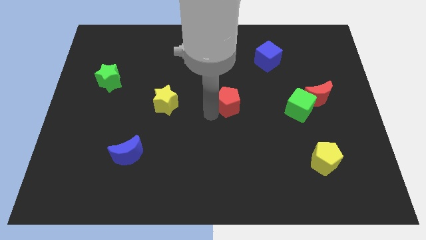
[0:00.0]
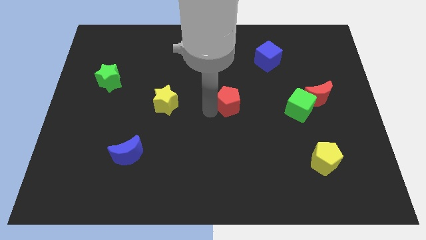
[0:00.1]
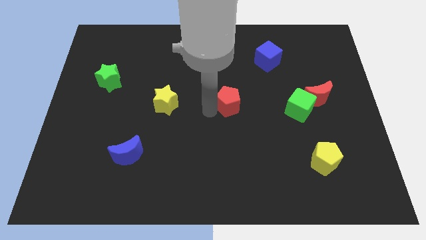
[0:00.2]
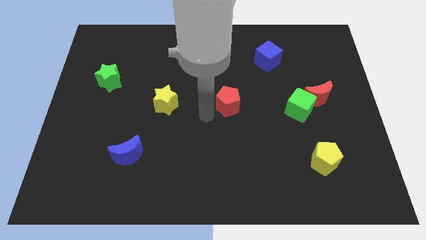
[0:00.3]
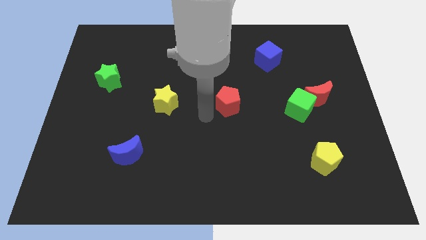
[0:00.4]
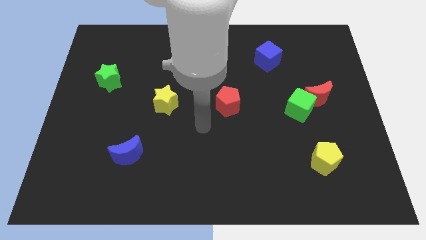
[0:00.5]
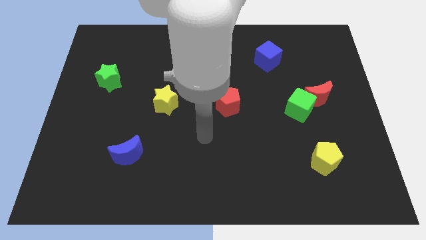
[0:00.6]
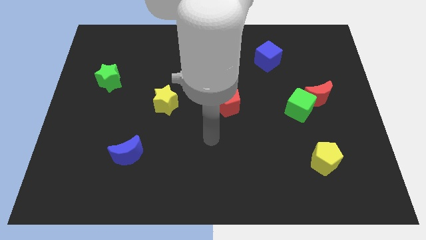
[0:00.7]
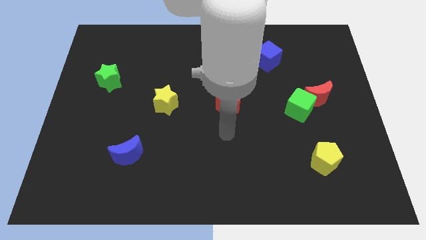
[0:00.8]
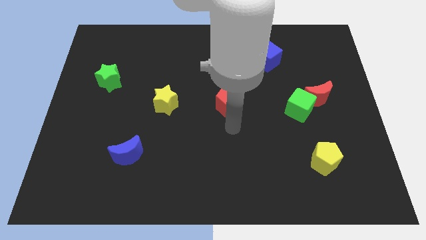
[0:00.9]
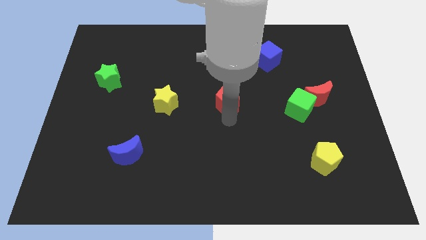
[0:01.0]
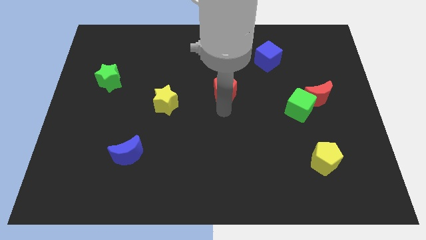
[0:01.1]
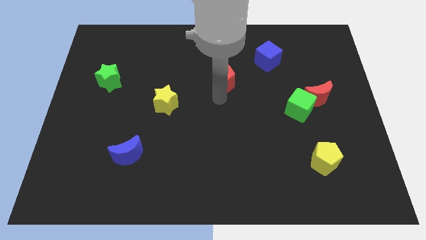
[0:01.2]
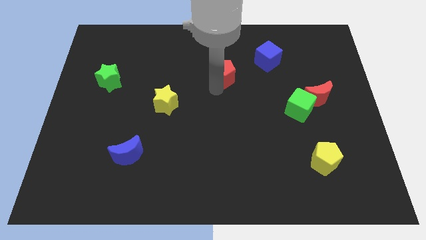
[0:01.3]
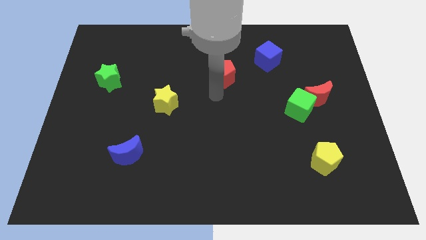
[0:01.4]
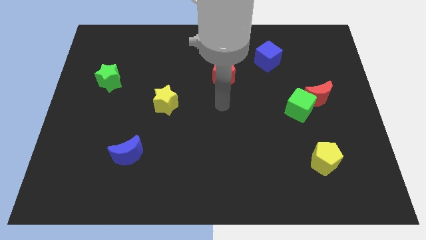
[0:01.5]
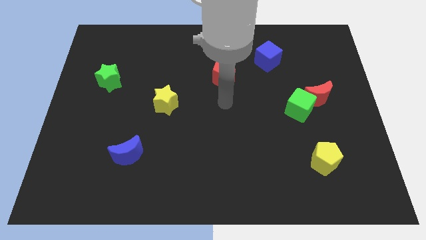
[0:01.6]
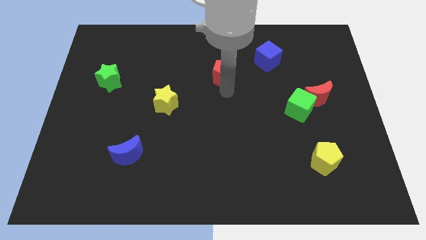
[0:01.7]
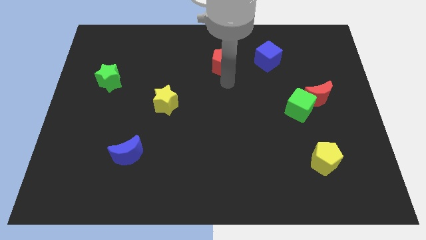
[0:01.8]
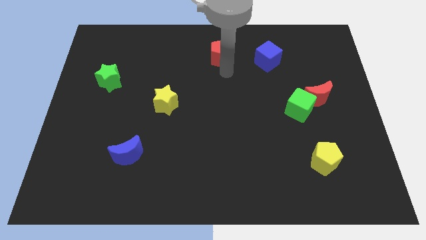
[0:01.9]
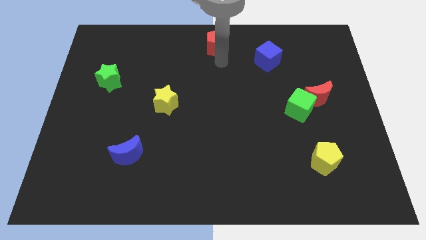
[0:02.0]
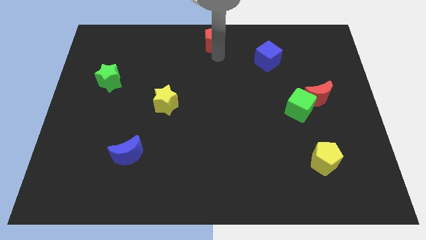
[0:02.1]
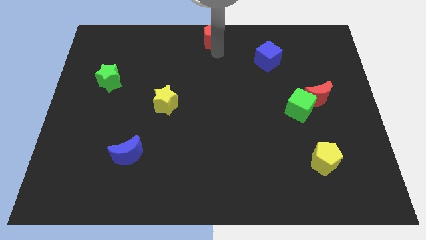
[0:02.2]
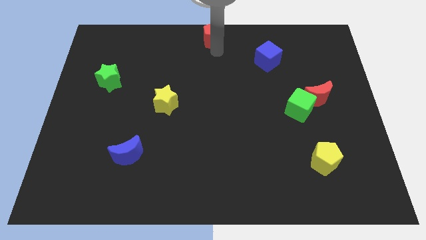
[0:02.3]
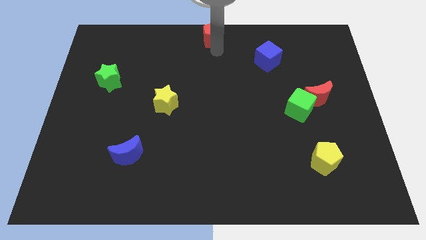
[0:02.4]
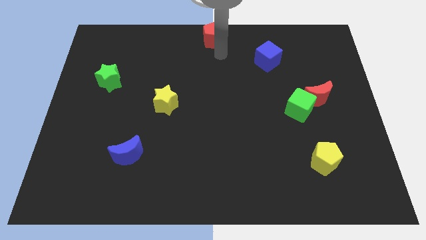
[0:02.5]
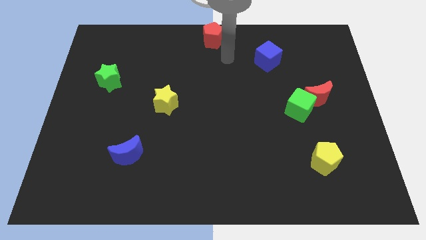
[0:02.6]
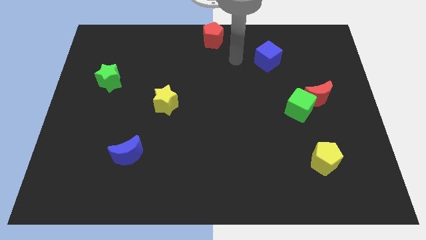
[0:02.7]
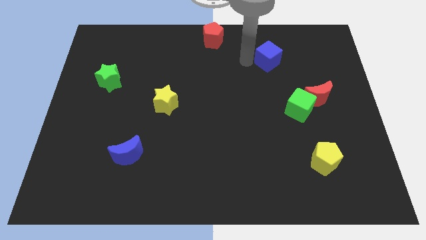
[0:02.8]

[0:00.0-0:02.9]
move red pentagon to the top middle

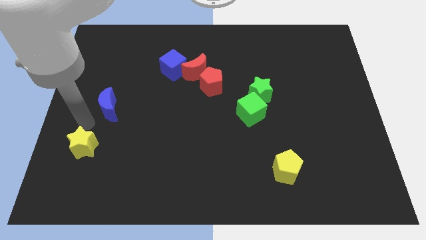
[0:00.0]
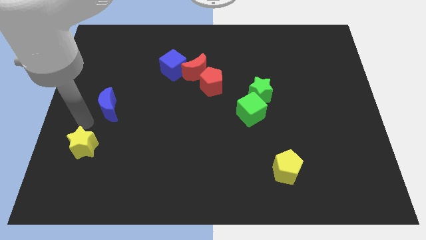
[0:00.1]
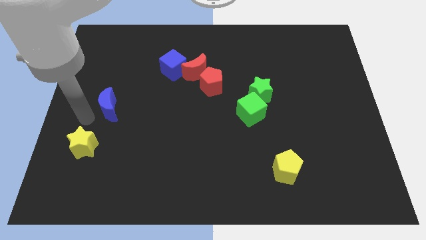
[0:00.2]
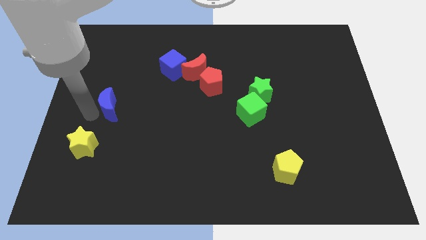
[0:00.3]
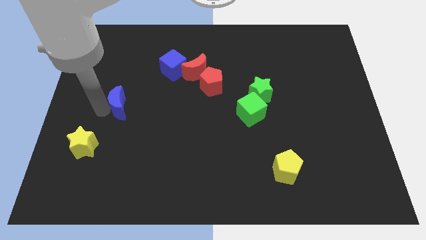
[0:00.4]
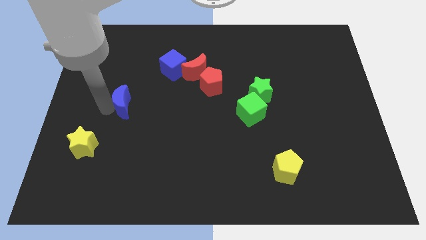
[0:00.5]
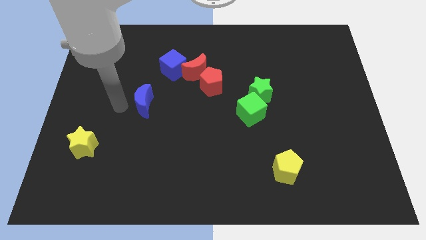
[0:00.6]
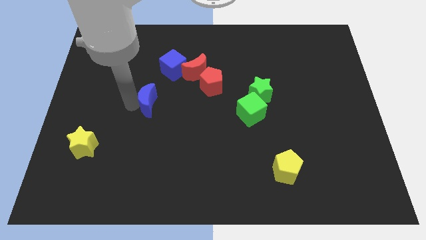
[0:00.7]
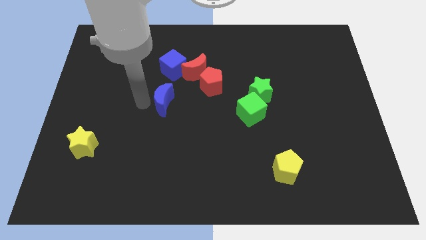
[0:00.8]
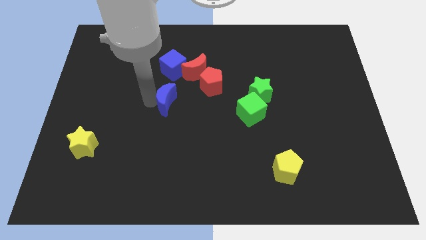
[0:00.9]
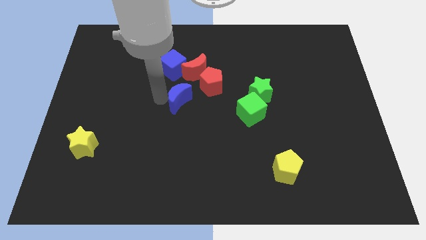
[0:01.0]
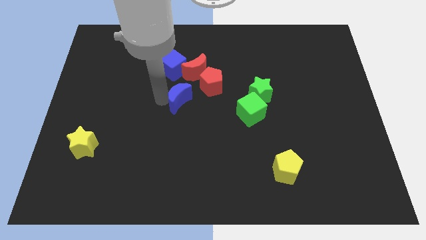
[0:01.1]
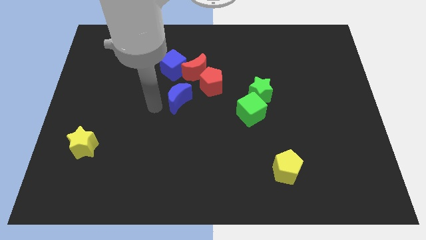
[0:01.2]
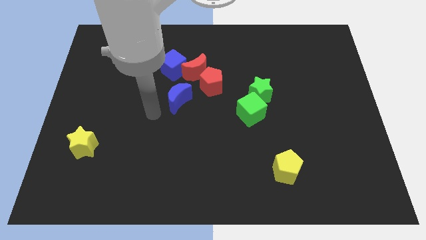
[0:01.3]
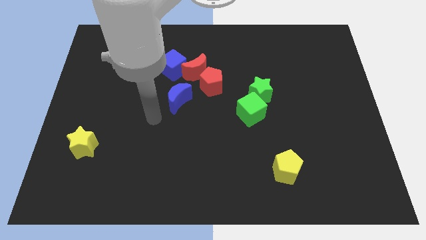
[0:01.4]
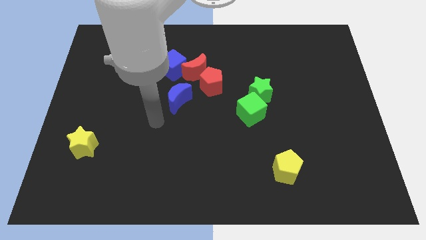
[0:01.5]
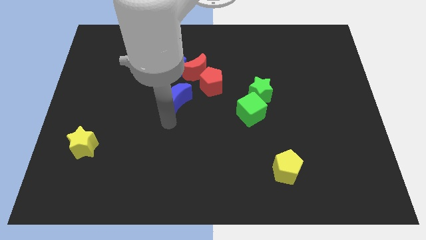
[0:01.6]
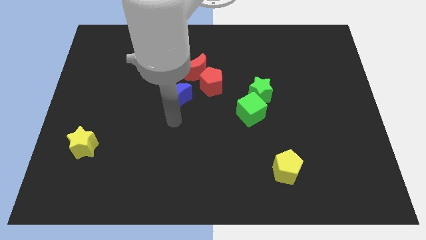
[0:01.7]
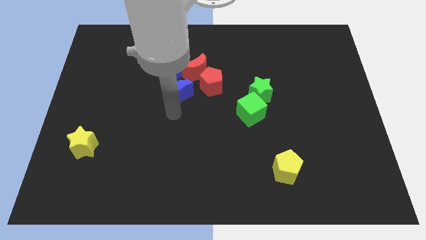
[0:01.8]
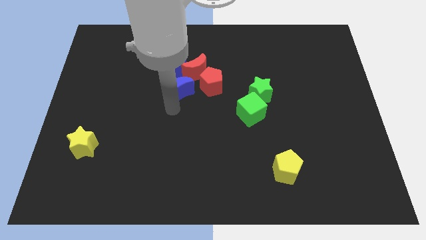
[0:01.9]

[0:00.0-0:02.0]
push the blue crescent to the bottom of the blue cube

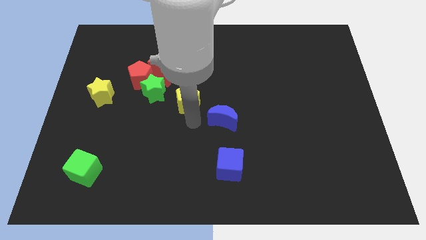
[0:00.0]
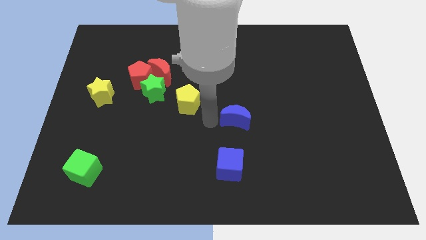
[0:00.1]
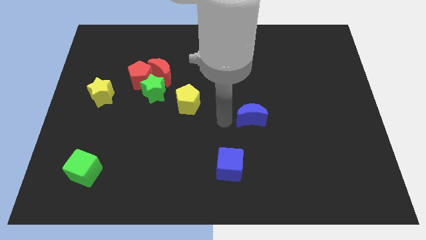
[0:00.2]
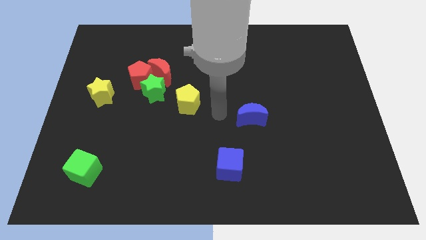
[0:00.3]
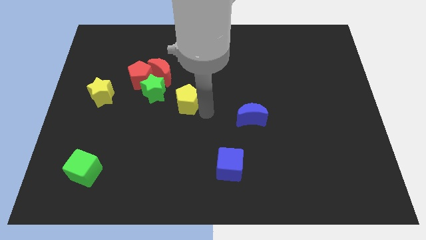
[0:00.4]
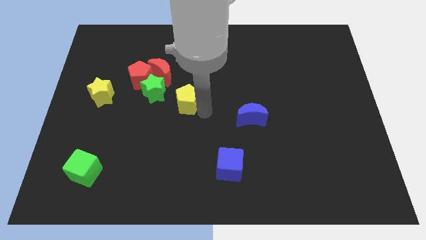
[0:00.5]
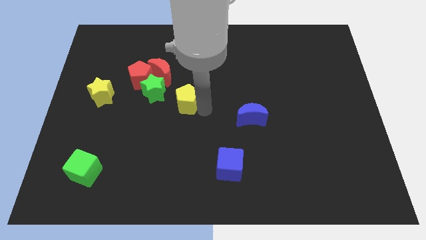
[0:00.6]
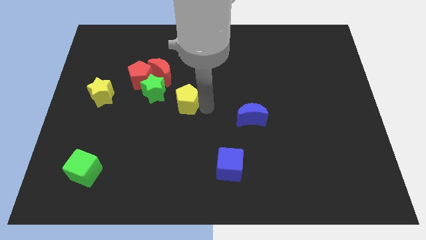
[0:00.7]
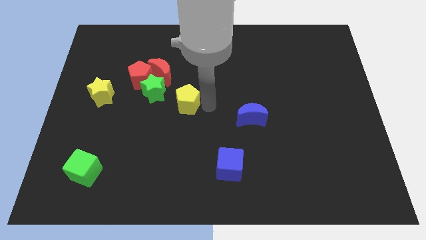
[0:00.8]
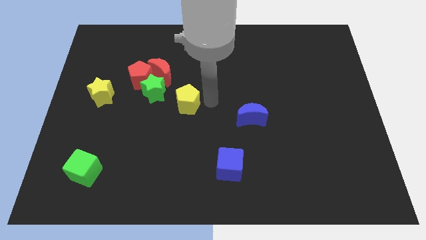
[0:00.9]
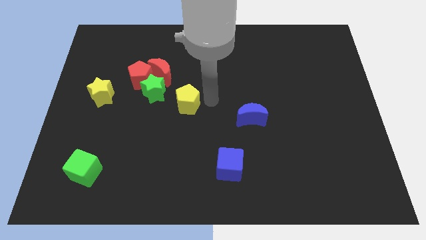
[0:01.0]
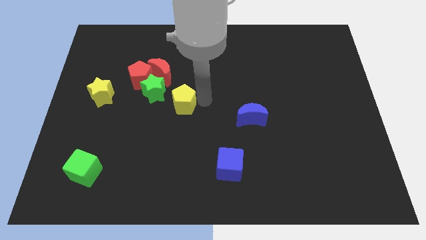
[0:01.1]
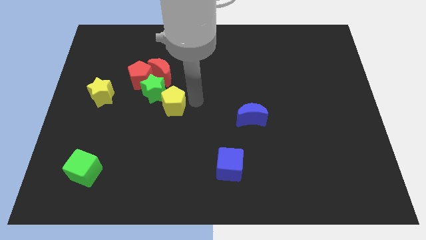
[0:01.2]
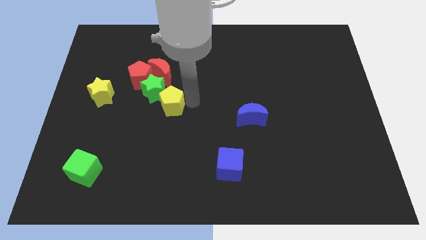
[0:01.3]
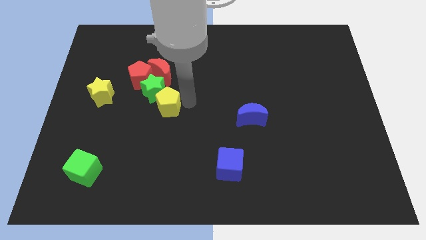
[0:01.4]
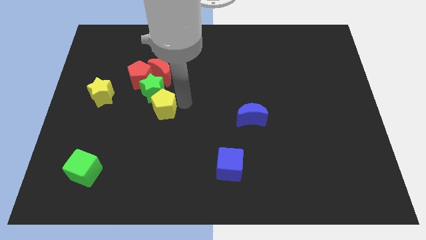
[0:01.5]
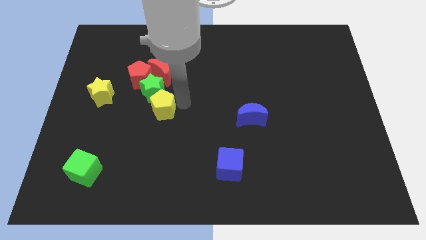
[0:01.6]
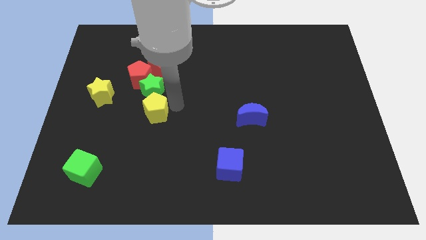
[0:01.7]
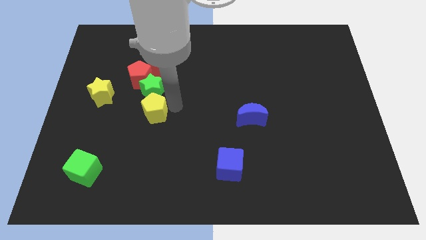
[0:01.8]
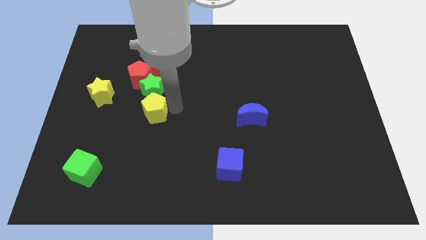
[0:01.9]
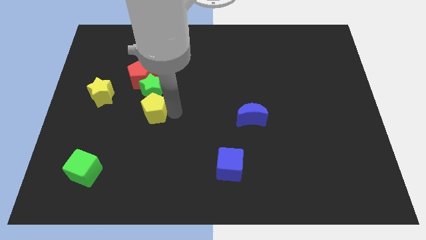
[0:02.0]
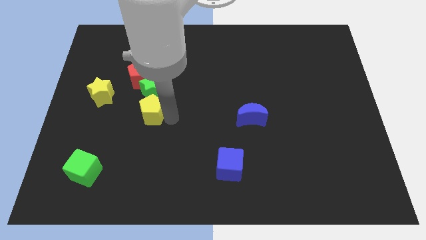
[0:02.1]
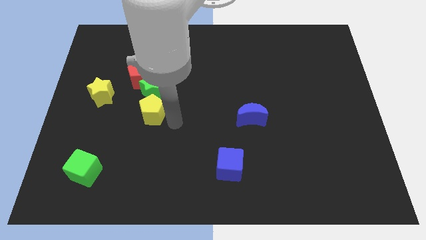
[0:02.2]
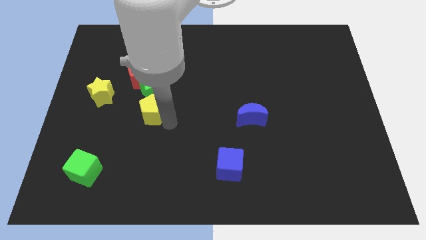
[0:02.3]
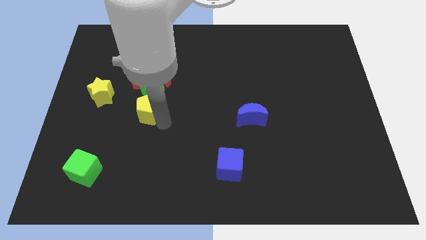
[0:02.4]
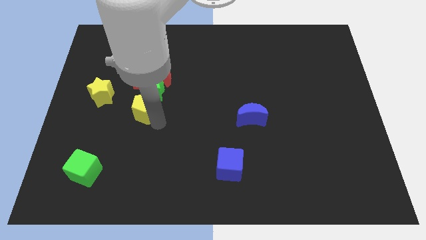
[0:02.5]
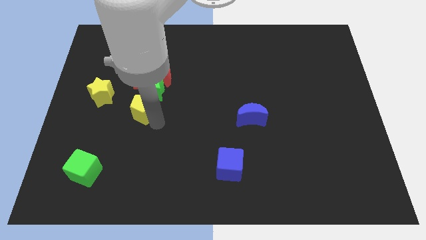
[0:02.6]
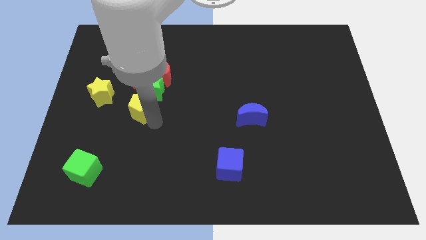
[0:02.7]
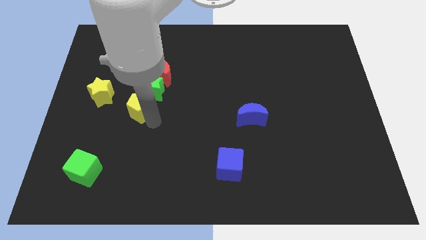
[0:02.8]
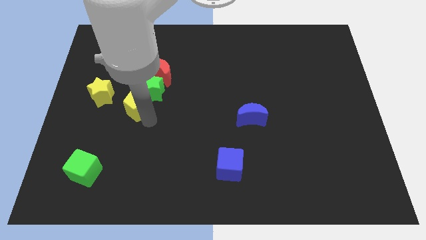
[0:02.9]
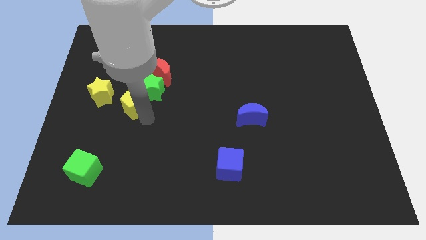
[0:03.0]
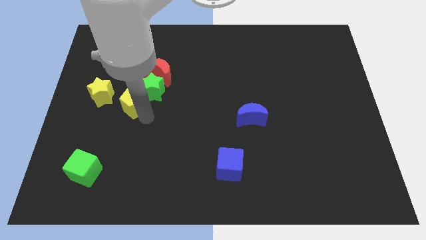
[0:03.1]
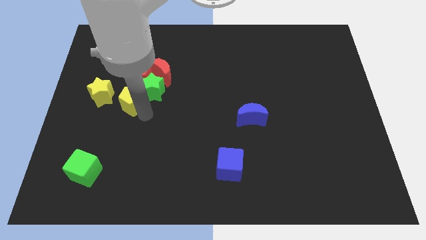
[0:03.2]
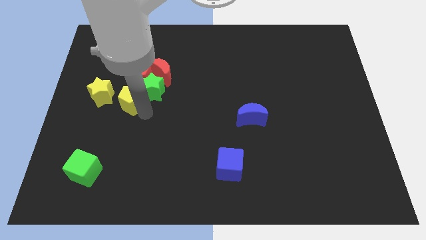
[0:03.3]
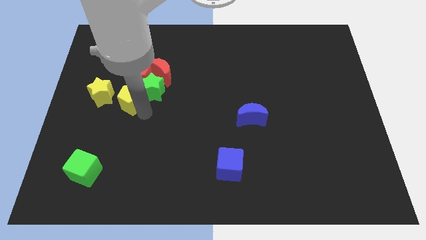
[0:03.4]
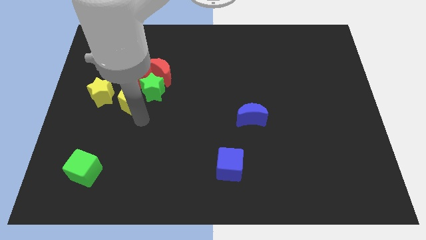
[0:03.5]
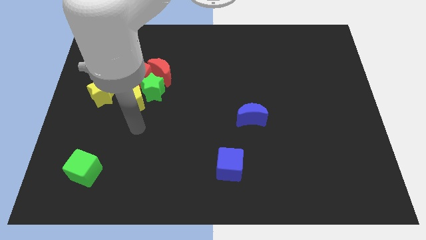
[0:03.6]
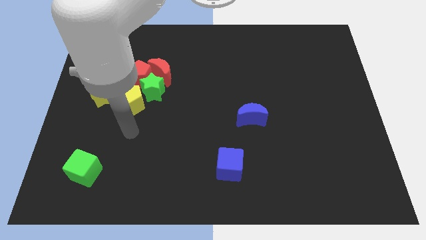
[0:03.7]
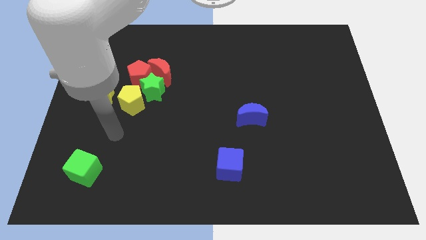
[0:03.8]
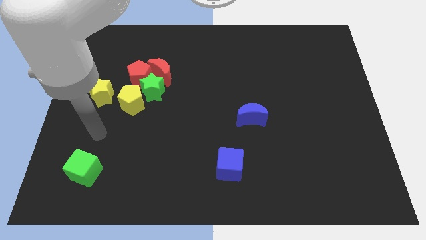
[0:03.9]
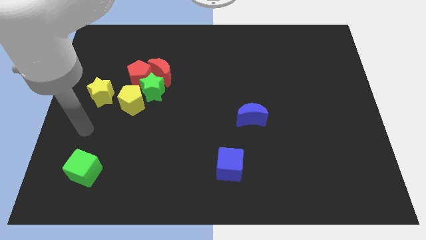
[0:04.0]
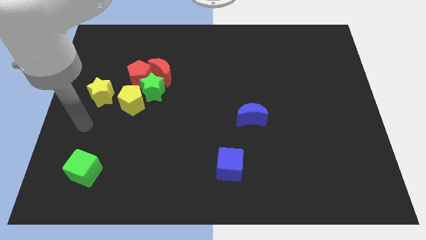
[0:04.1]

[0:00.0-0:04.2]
push the yellow pentagon into the middle of green star and yellow star
